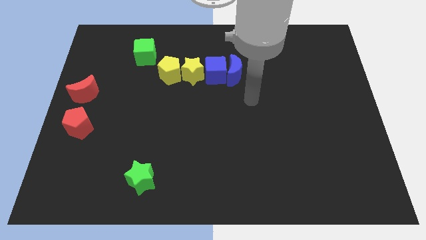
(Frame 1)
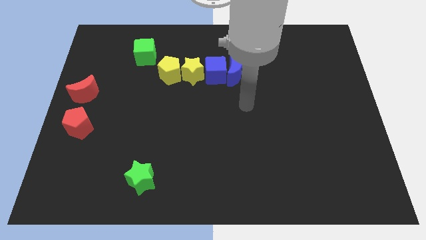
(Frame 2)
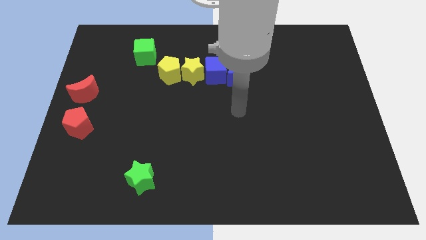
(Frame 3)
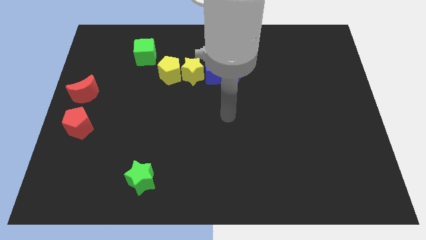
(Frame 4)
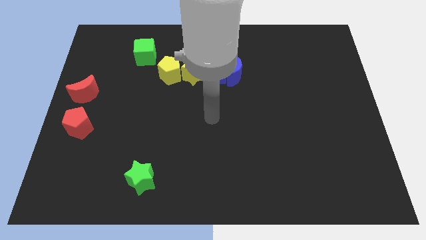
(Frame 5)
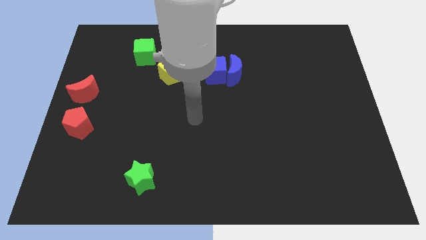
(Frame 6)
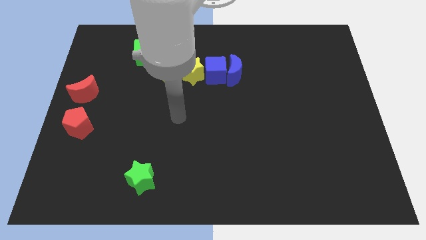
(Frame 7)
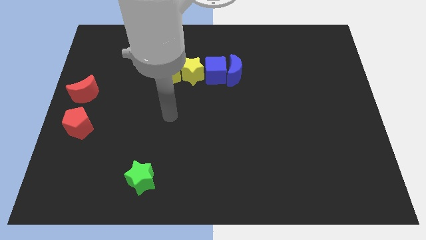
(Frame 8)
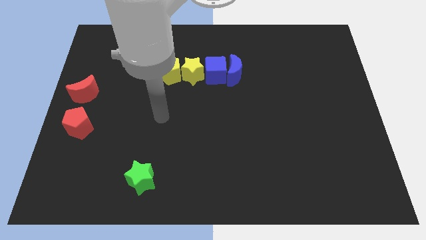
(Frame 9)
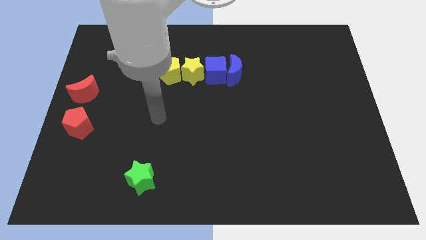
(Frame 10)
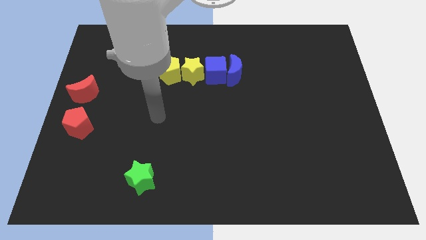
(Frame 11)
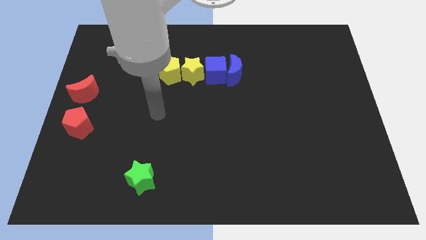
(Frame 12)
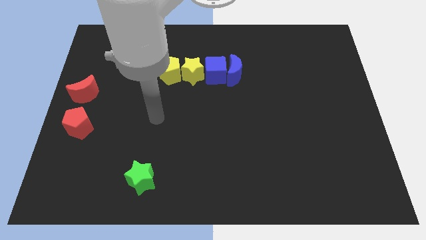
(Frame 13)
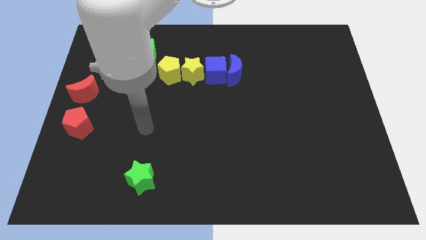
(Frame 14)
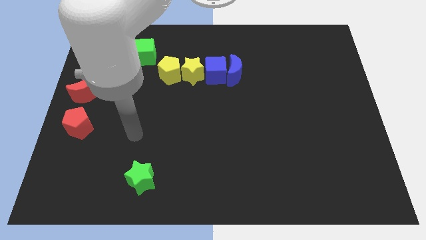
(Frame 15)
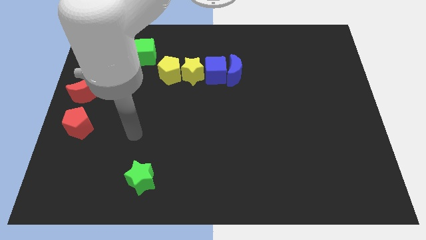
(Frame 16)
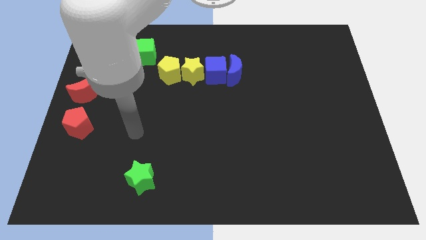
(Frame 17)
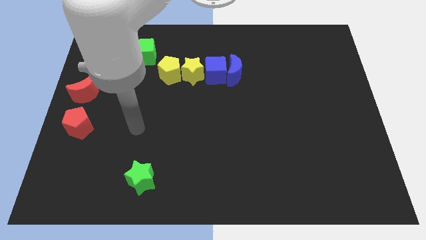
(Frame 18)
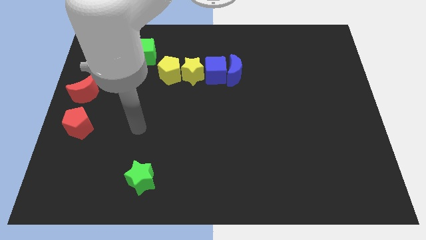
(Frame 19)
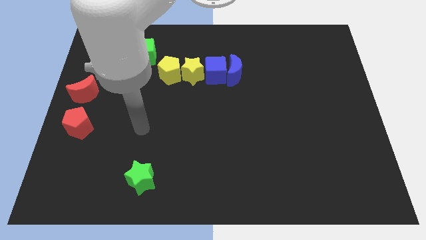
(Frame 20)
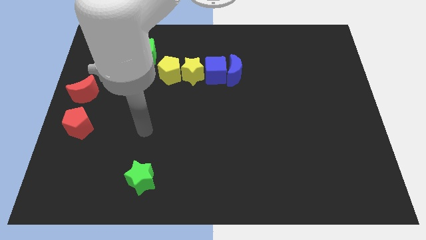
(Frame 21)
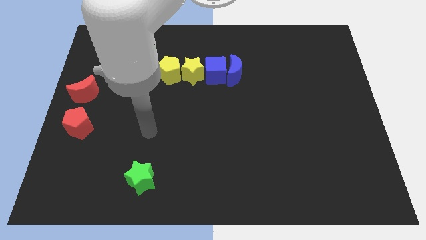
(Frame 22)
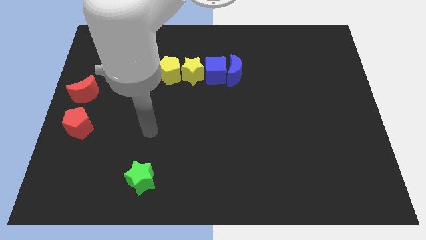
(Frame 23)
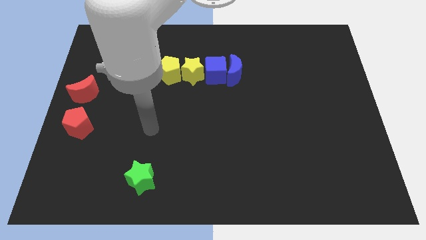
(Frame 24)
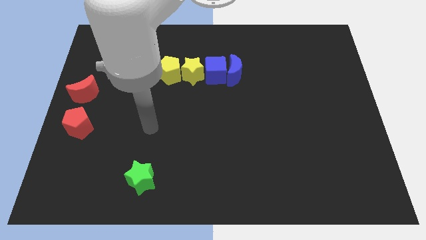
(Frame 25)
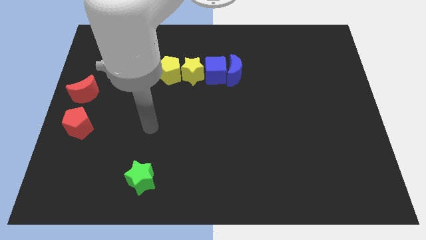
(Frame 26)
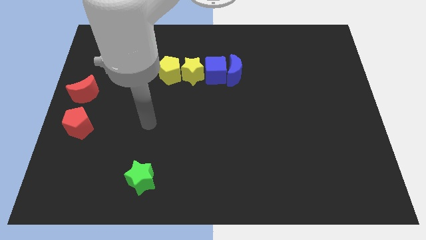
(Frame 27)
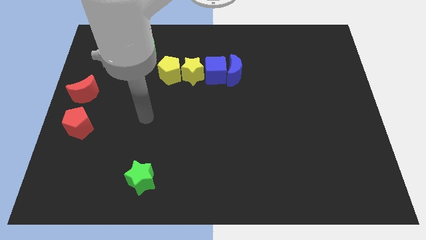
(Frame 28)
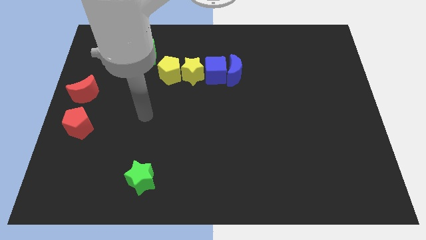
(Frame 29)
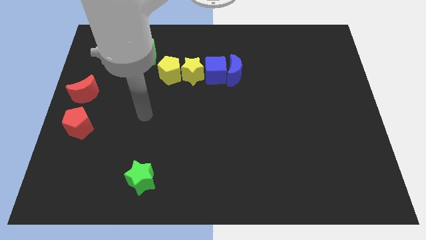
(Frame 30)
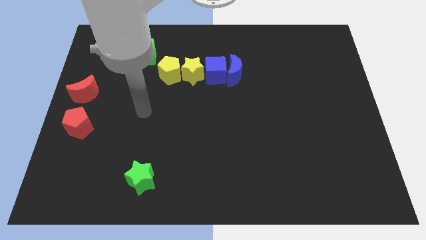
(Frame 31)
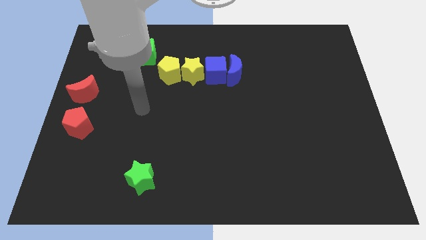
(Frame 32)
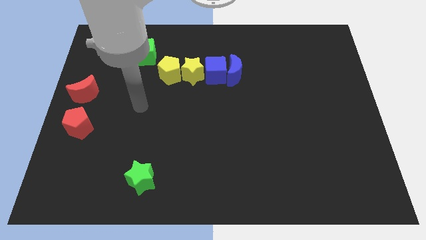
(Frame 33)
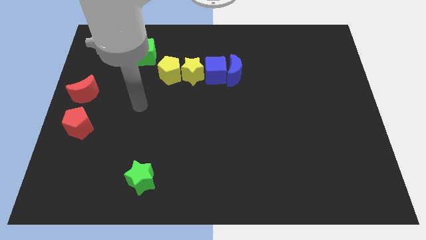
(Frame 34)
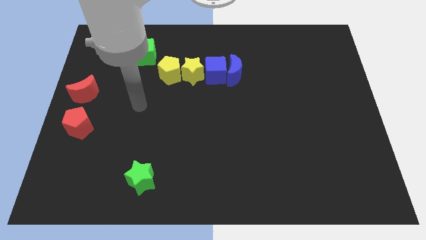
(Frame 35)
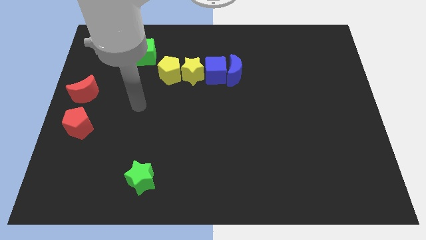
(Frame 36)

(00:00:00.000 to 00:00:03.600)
point your arm vertically below the green cube

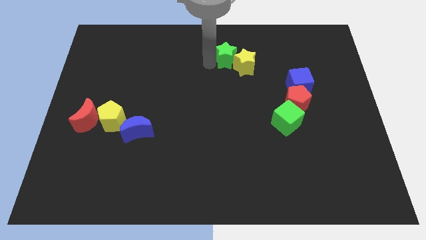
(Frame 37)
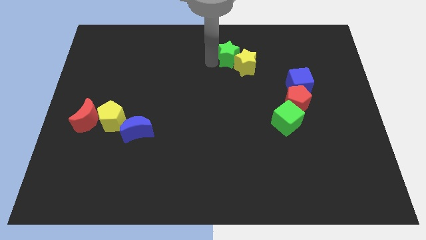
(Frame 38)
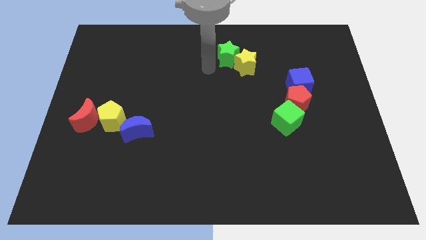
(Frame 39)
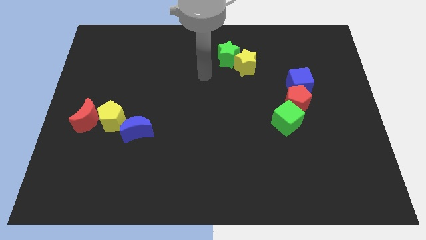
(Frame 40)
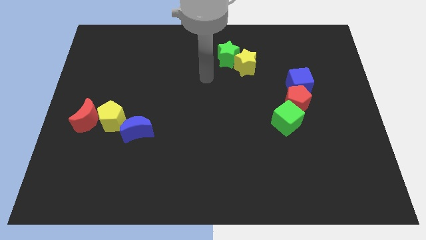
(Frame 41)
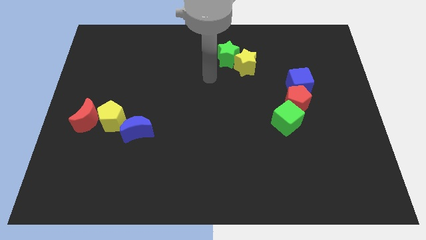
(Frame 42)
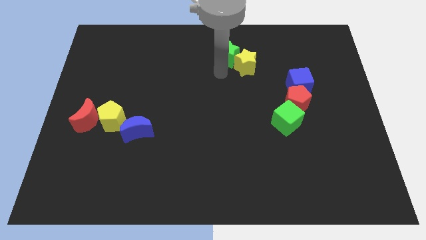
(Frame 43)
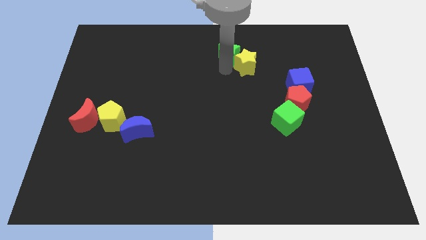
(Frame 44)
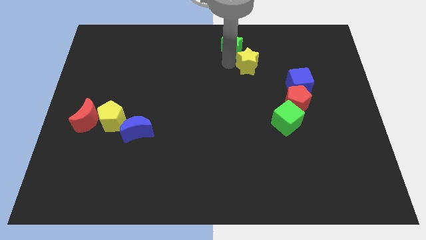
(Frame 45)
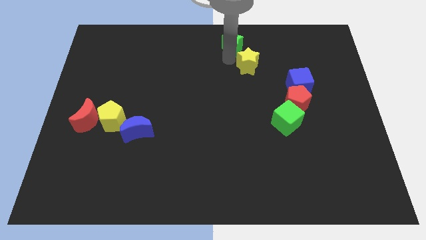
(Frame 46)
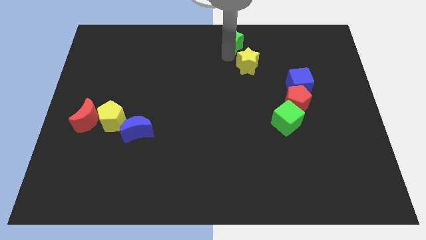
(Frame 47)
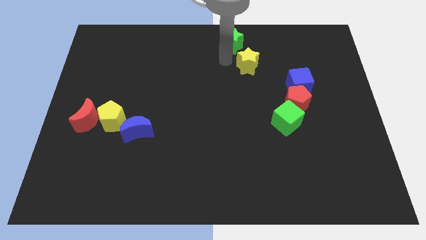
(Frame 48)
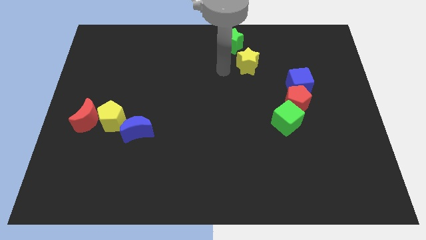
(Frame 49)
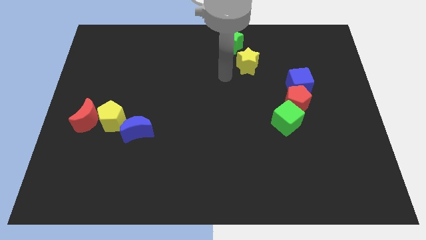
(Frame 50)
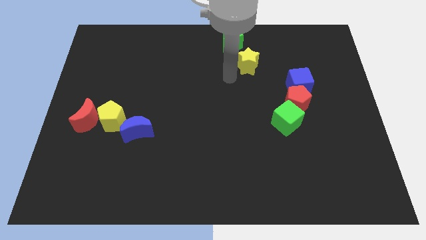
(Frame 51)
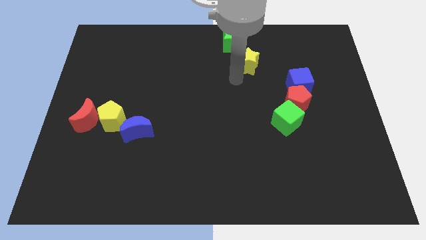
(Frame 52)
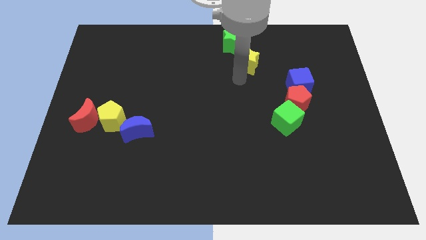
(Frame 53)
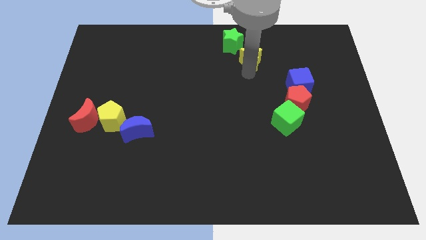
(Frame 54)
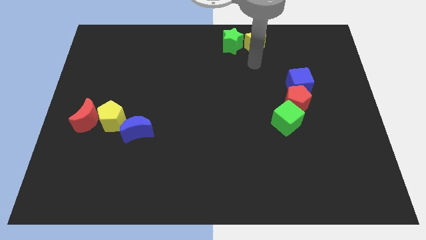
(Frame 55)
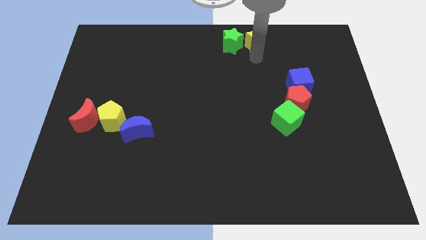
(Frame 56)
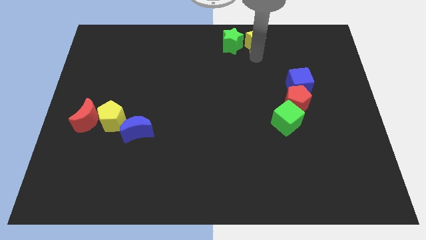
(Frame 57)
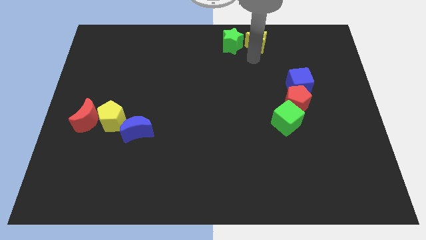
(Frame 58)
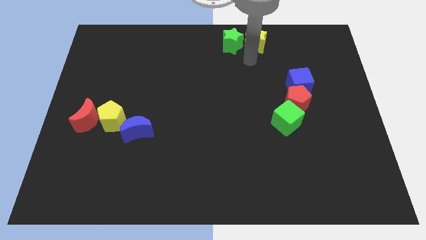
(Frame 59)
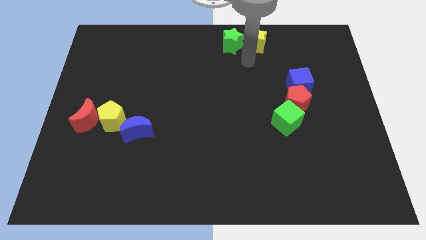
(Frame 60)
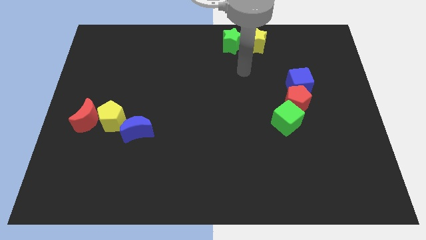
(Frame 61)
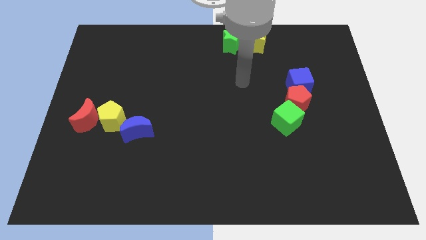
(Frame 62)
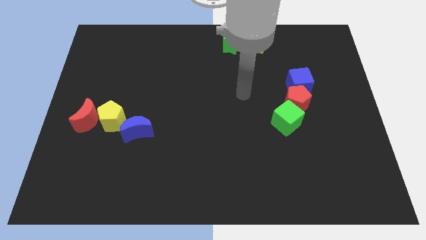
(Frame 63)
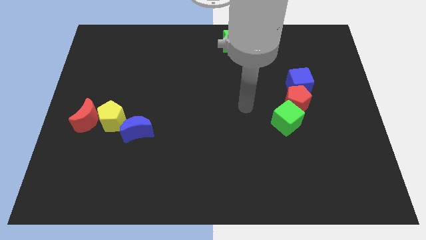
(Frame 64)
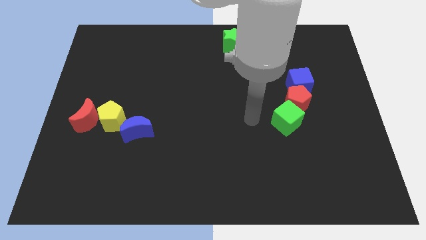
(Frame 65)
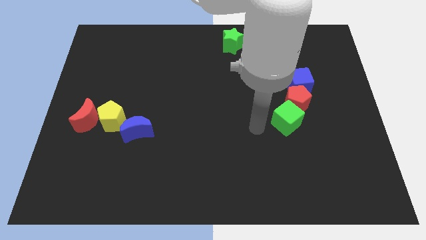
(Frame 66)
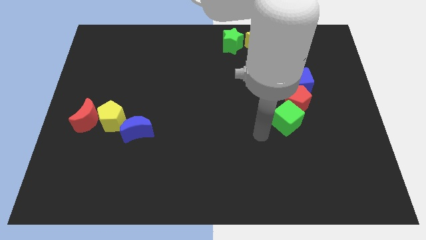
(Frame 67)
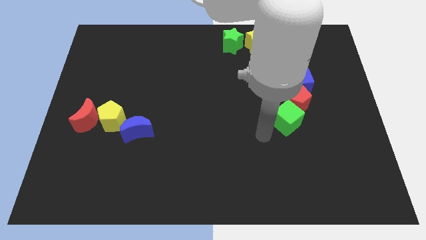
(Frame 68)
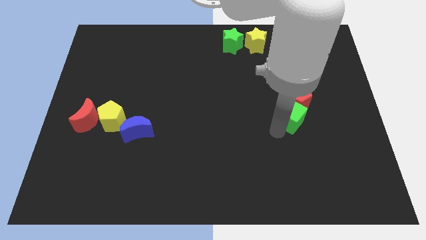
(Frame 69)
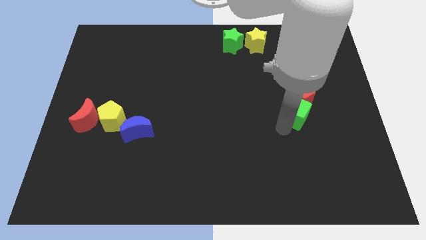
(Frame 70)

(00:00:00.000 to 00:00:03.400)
slightly move the yellow star to the top of the board

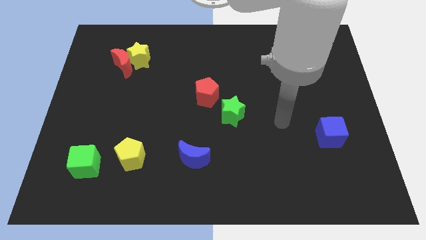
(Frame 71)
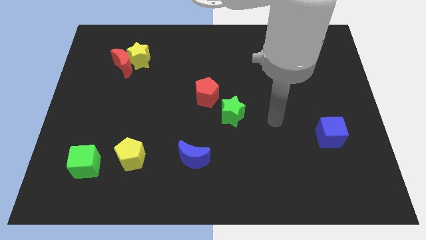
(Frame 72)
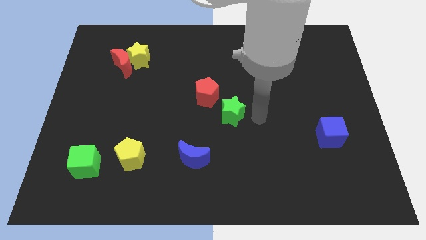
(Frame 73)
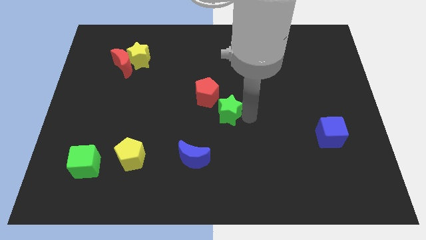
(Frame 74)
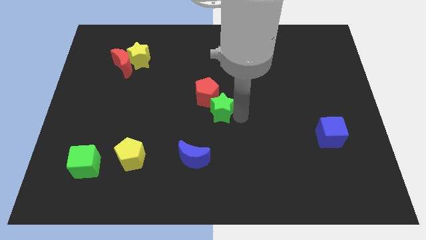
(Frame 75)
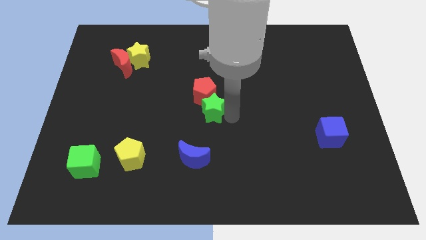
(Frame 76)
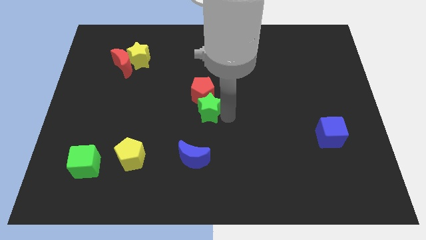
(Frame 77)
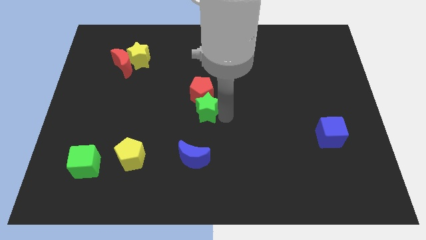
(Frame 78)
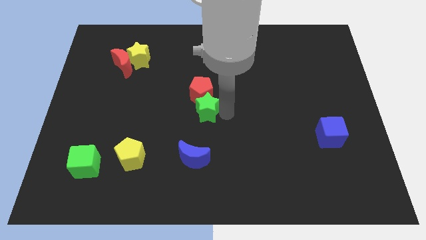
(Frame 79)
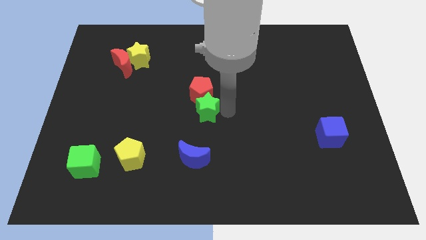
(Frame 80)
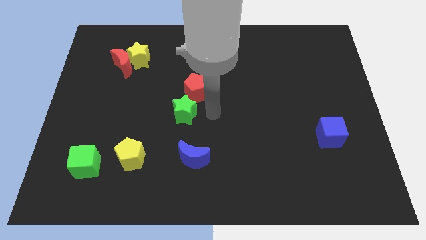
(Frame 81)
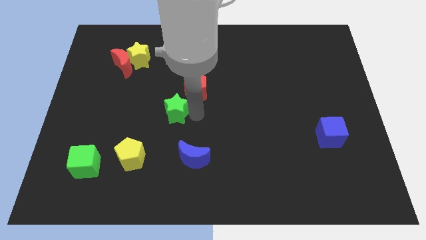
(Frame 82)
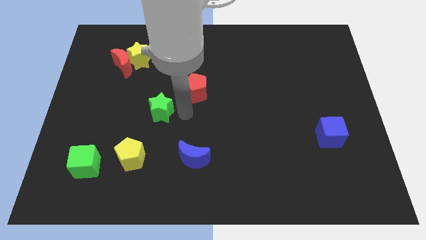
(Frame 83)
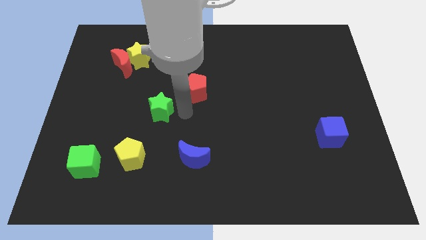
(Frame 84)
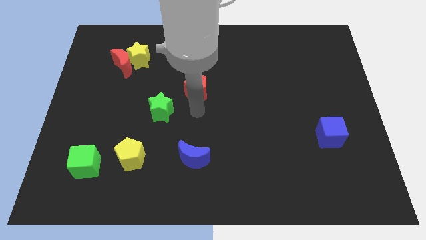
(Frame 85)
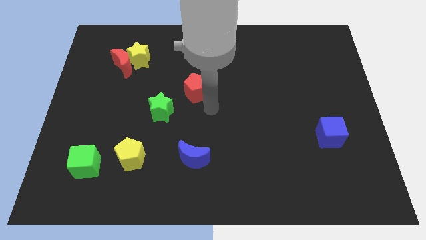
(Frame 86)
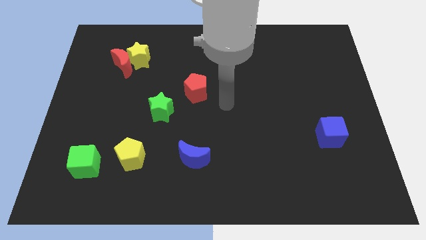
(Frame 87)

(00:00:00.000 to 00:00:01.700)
slide the green star to left center
